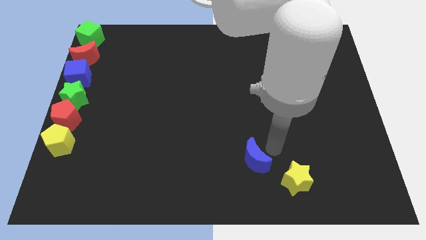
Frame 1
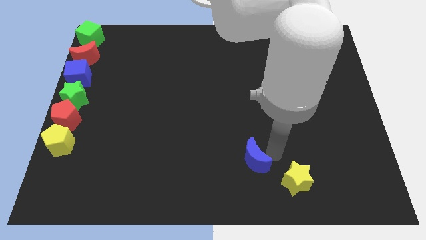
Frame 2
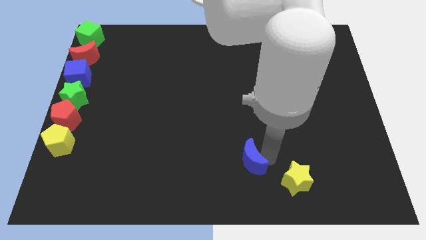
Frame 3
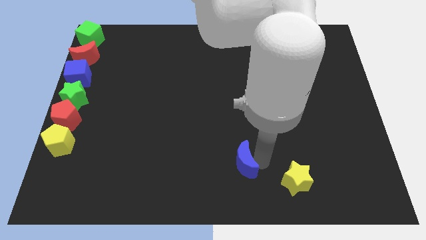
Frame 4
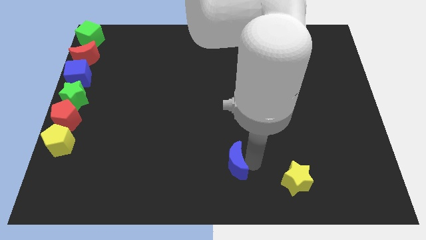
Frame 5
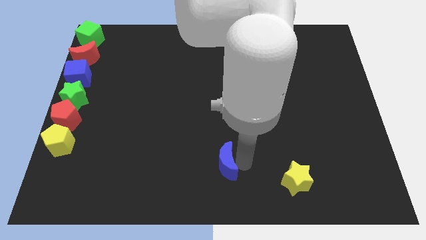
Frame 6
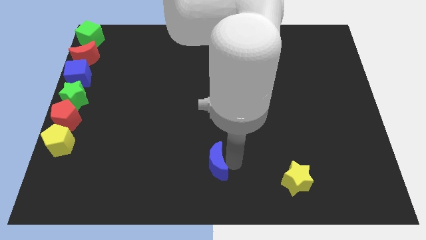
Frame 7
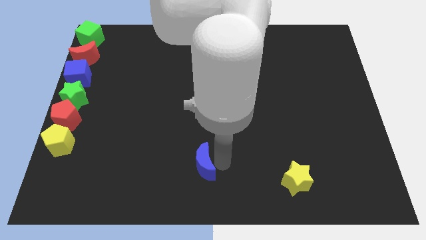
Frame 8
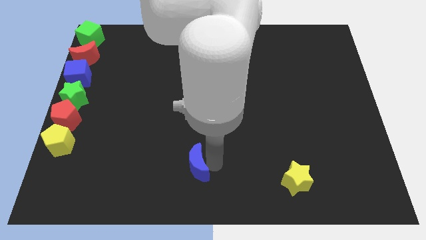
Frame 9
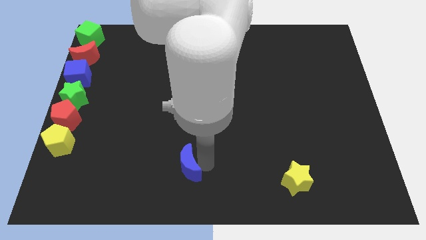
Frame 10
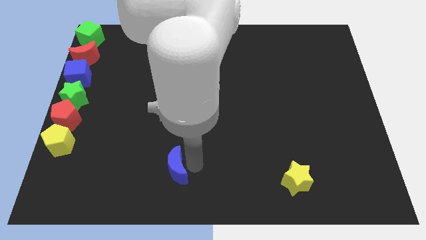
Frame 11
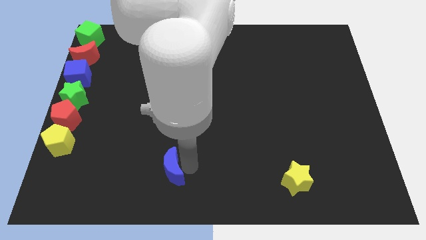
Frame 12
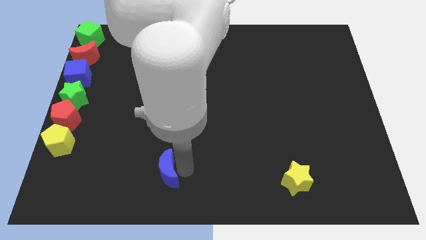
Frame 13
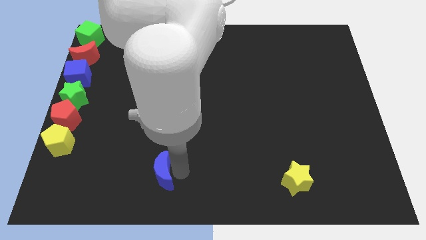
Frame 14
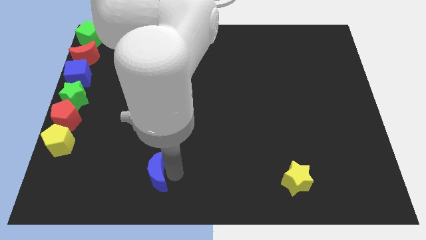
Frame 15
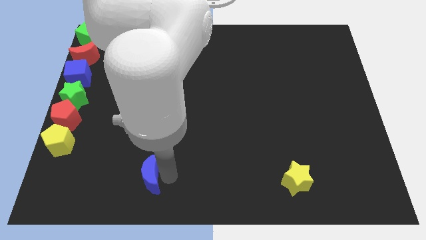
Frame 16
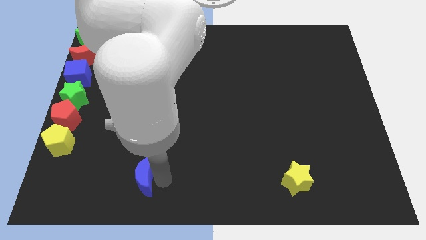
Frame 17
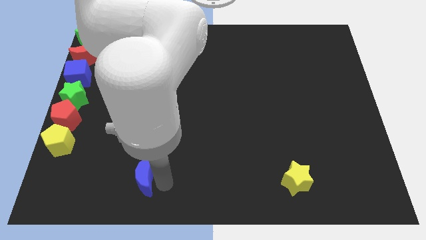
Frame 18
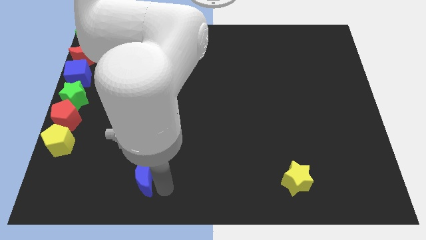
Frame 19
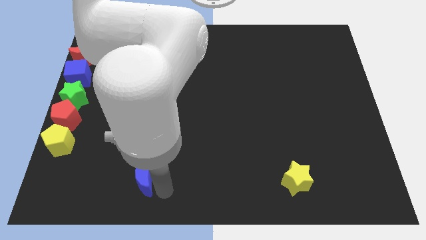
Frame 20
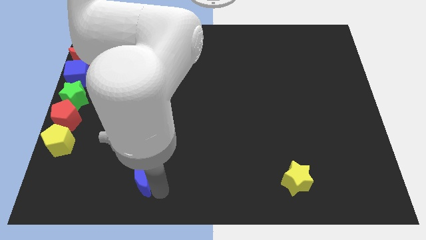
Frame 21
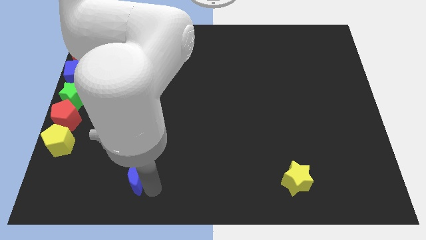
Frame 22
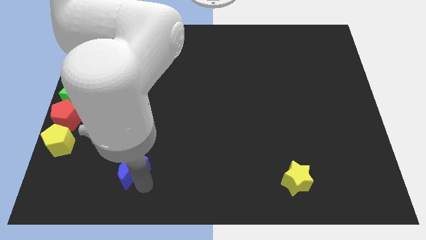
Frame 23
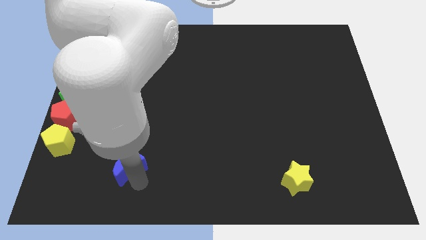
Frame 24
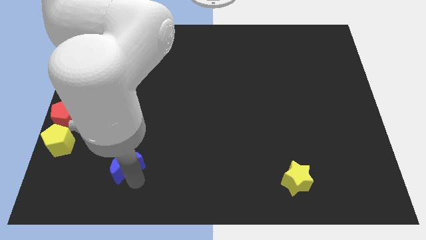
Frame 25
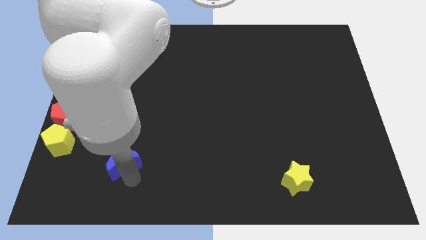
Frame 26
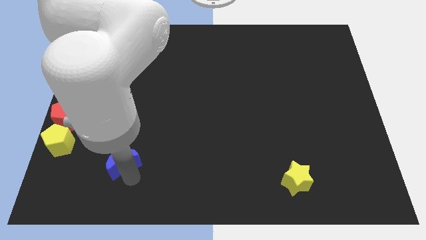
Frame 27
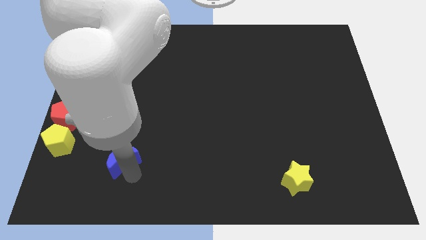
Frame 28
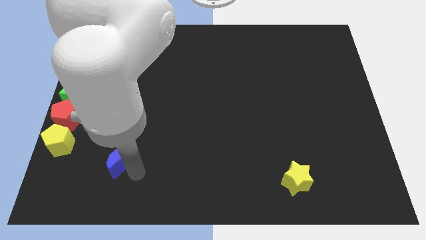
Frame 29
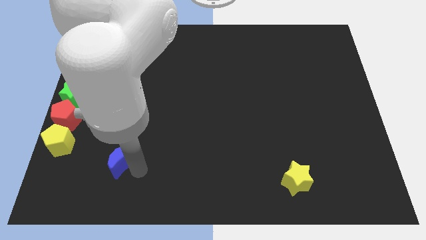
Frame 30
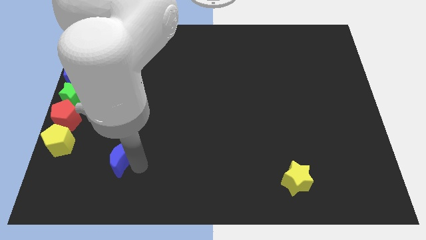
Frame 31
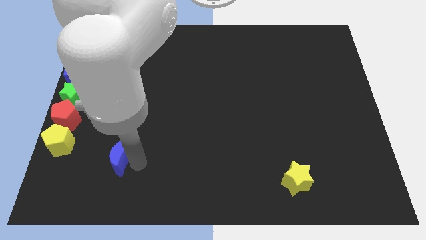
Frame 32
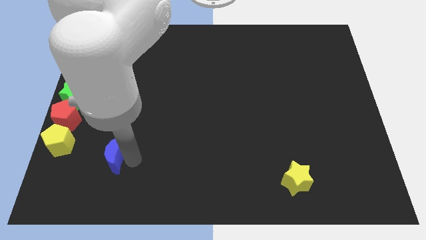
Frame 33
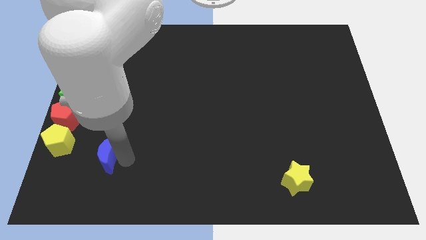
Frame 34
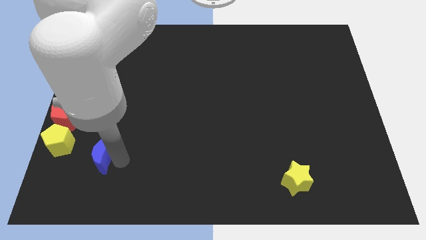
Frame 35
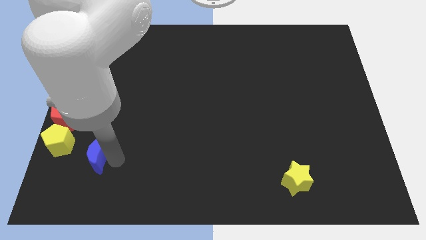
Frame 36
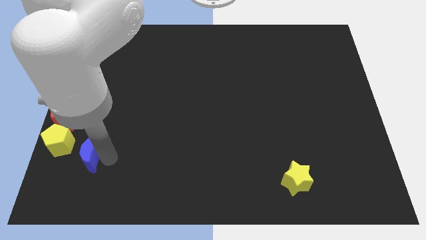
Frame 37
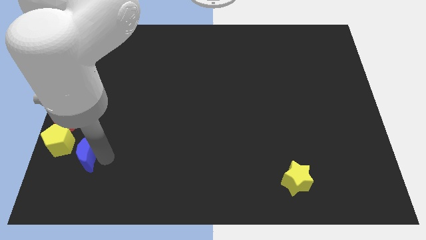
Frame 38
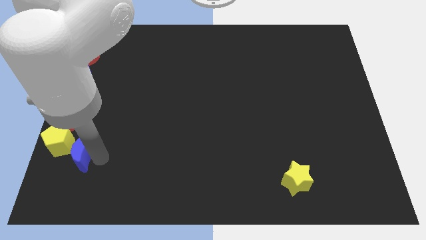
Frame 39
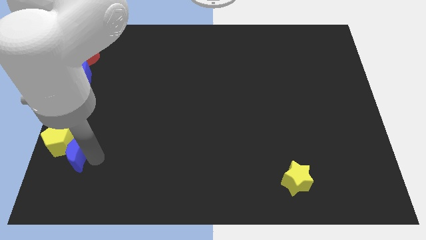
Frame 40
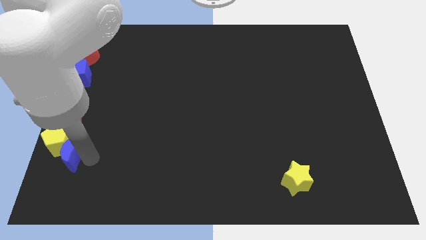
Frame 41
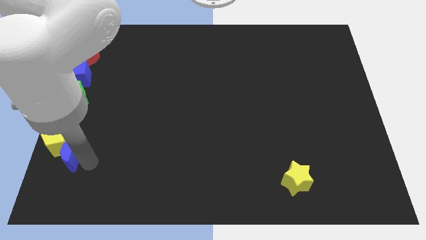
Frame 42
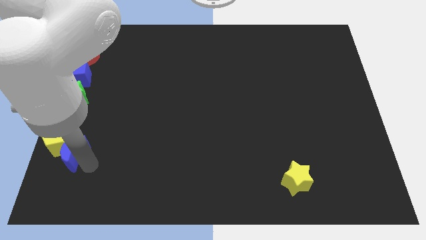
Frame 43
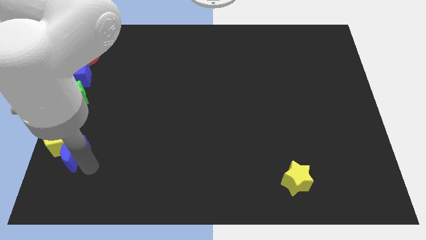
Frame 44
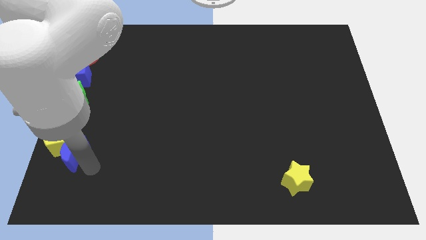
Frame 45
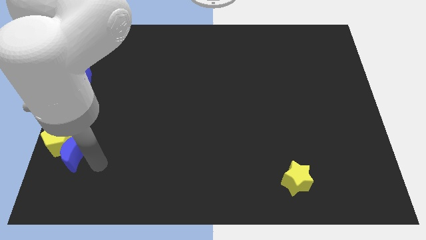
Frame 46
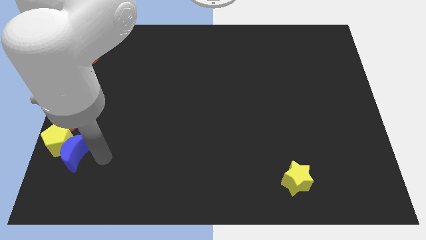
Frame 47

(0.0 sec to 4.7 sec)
push the blue moon into the yellow pentagon

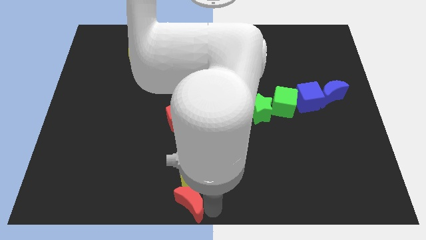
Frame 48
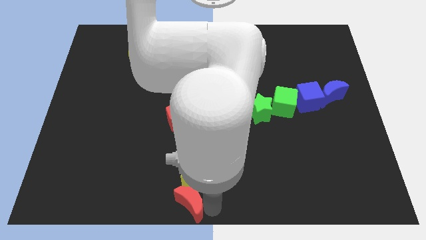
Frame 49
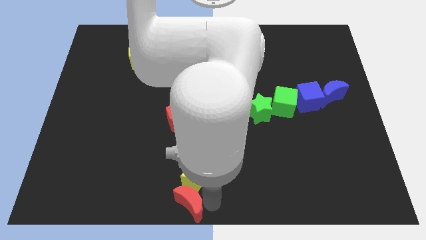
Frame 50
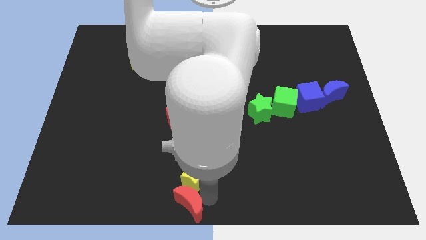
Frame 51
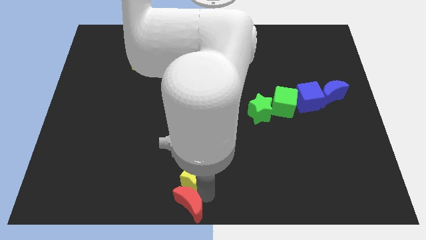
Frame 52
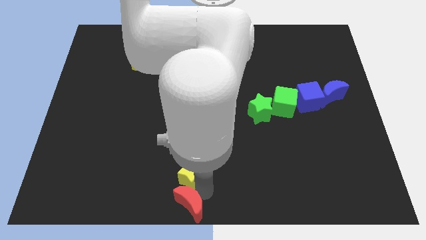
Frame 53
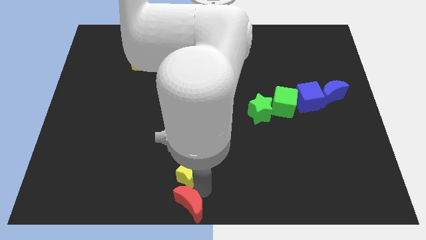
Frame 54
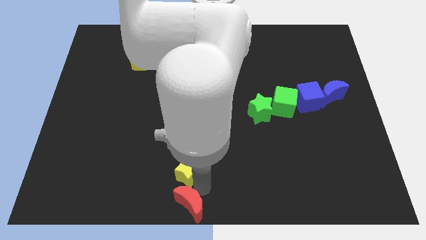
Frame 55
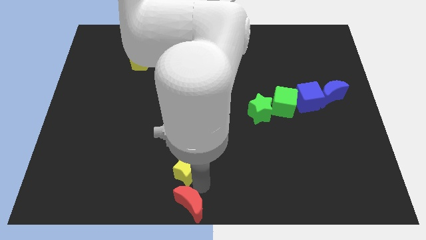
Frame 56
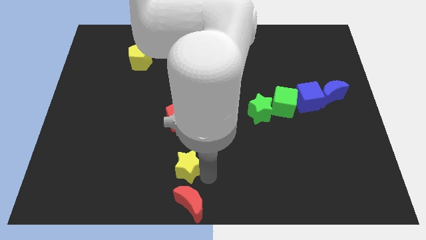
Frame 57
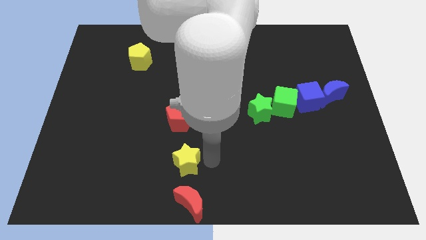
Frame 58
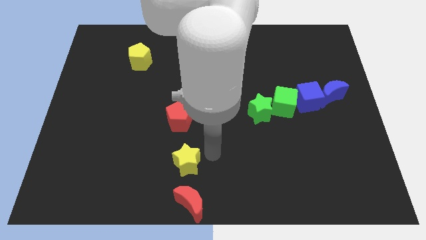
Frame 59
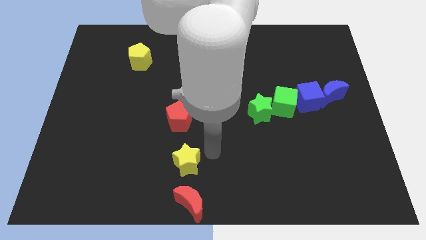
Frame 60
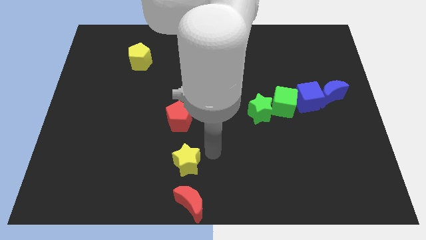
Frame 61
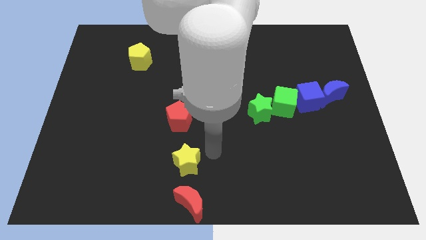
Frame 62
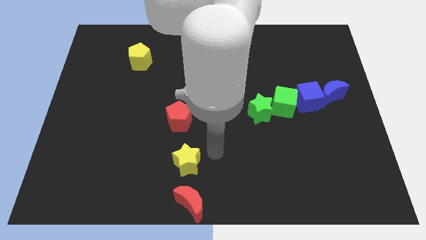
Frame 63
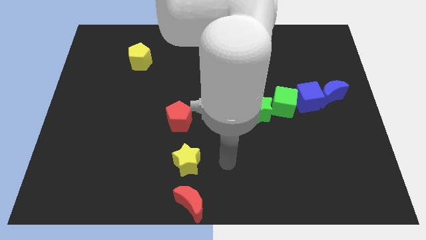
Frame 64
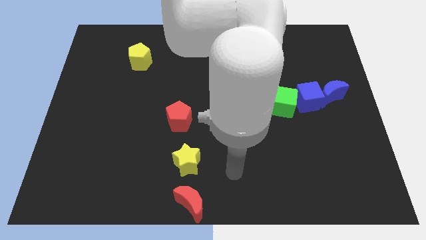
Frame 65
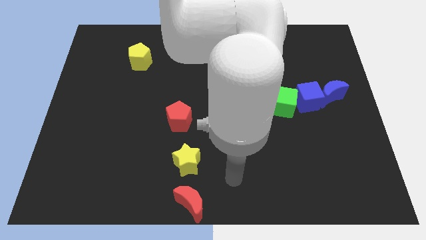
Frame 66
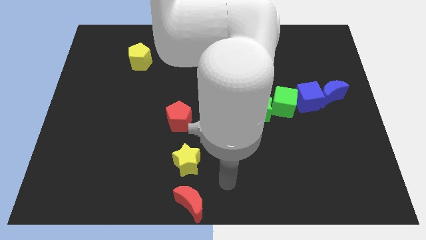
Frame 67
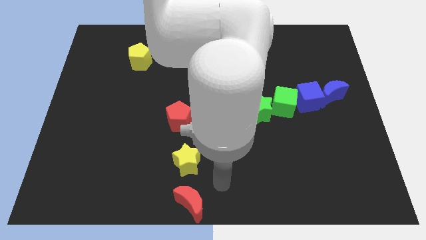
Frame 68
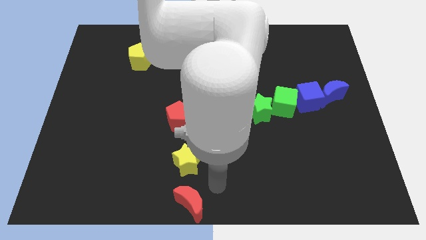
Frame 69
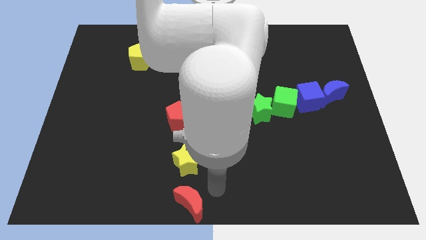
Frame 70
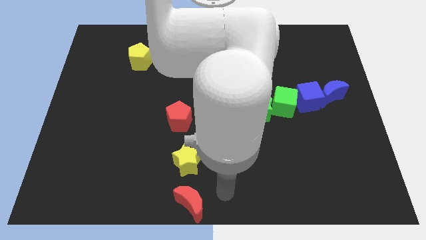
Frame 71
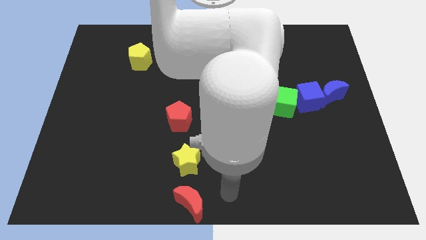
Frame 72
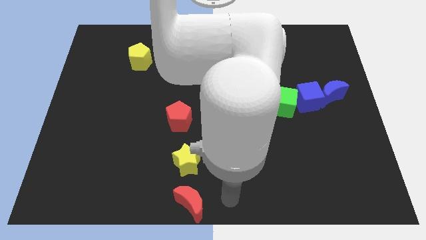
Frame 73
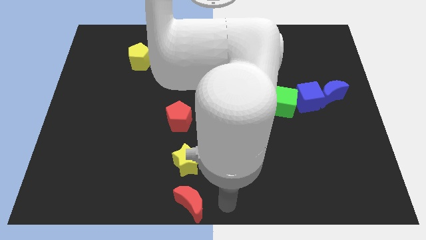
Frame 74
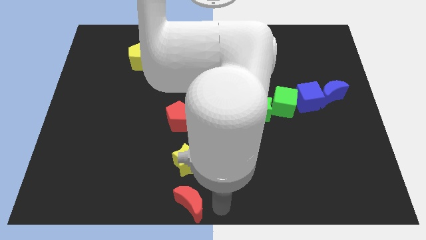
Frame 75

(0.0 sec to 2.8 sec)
slide the yellow star slightly upwards

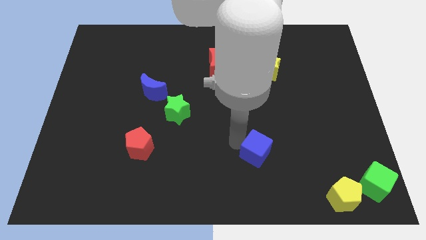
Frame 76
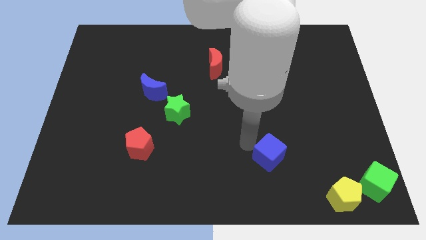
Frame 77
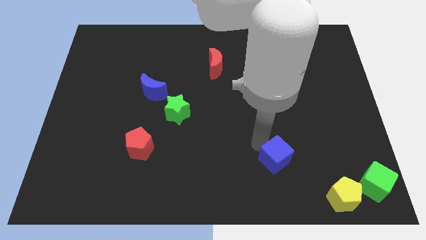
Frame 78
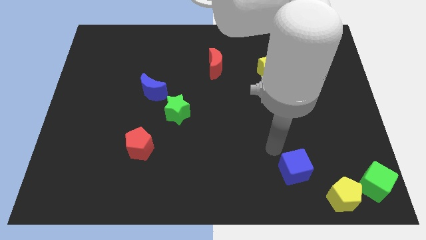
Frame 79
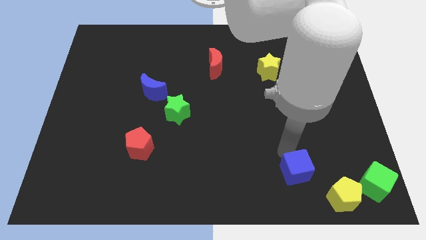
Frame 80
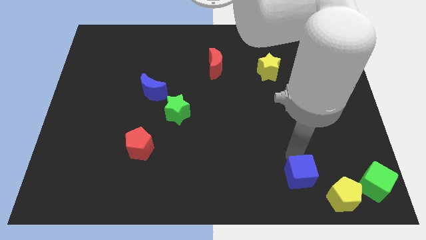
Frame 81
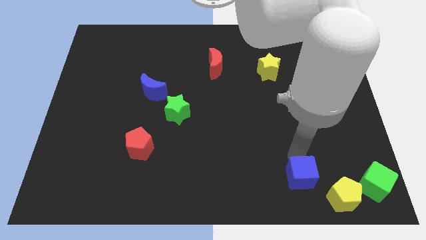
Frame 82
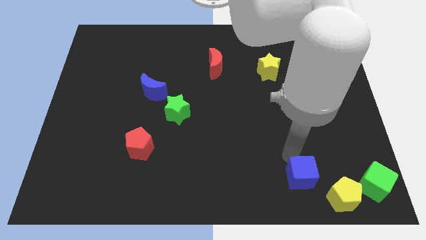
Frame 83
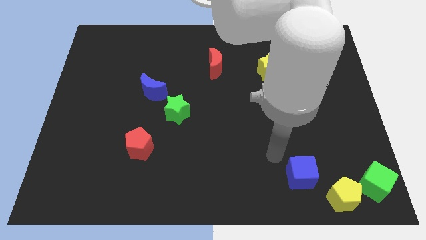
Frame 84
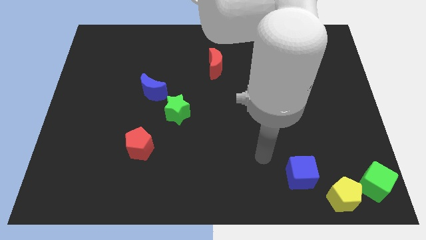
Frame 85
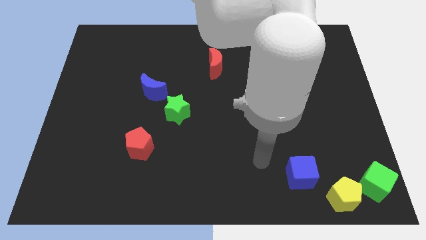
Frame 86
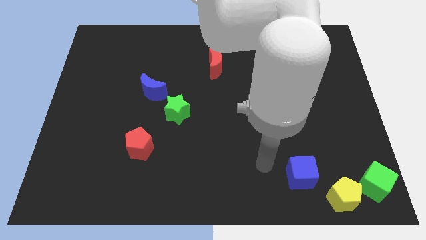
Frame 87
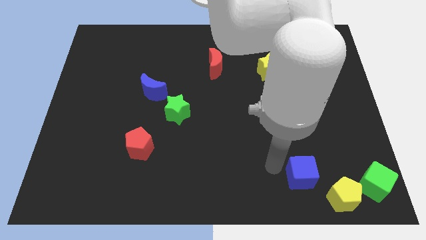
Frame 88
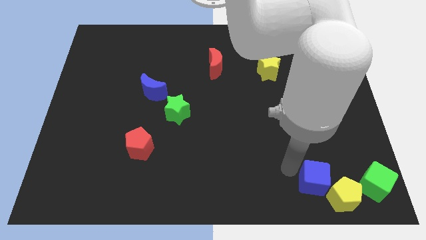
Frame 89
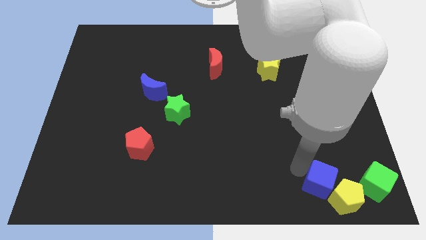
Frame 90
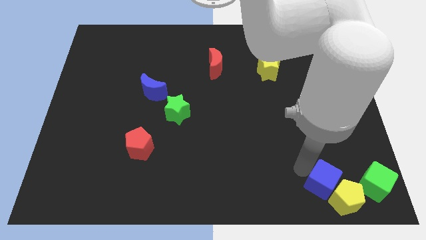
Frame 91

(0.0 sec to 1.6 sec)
drag the blue cube diagonally bottom right to the yellow star

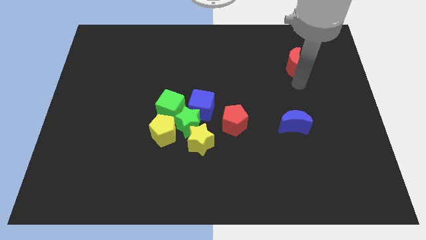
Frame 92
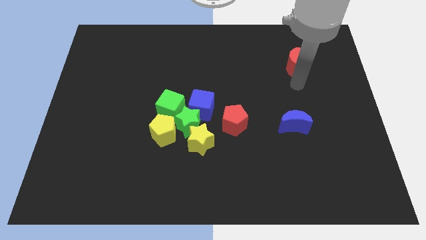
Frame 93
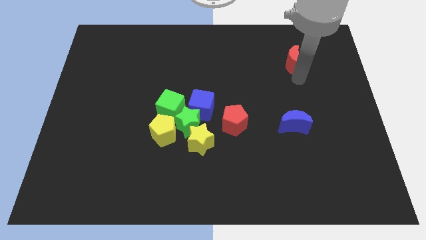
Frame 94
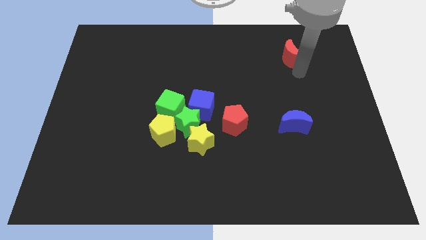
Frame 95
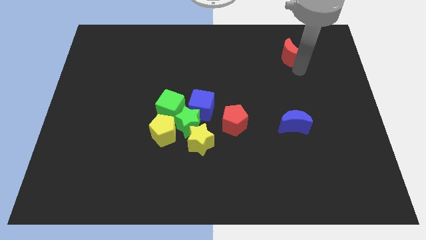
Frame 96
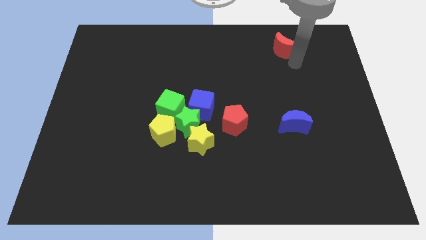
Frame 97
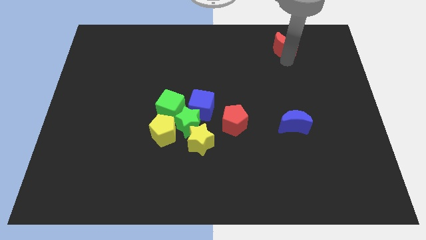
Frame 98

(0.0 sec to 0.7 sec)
move the red crescent to the top of the board
